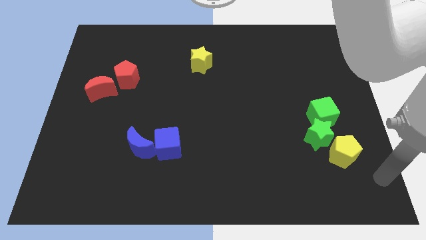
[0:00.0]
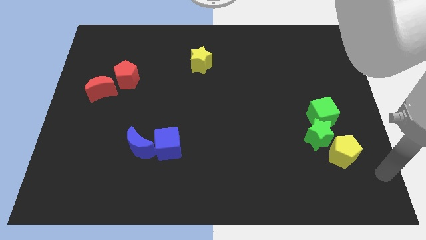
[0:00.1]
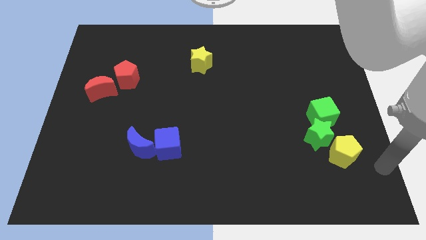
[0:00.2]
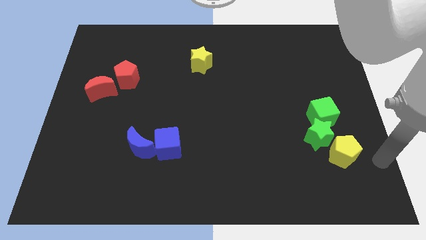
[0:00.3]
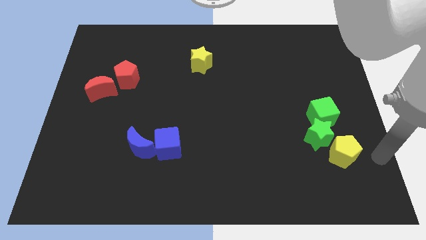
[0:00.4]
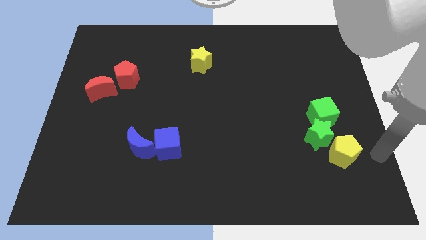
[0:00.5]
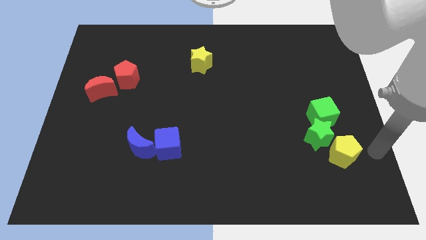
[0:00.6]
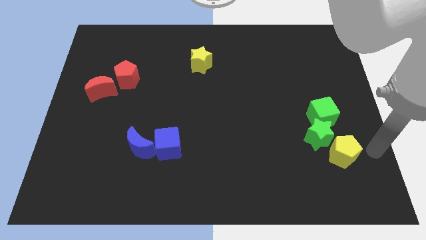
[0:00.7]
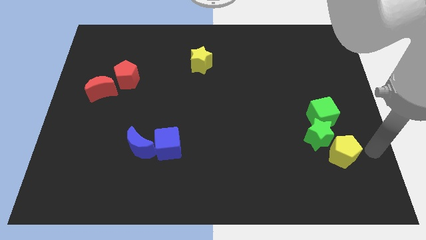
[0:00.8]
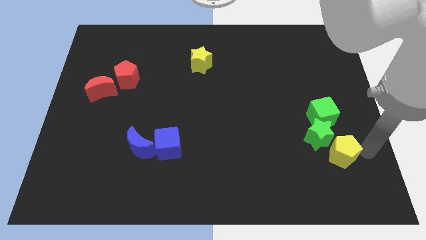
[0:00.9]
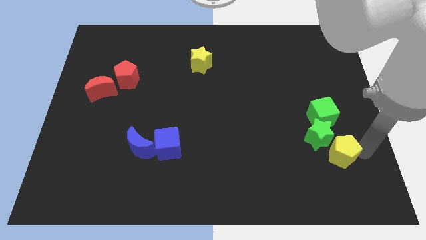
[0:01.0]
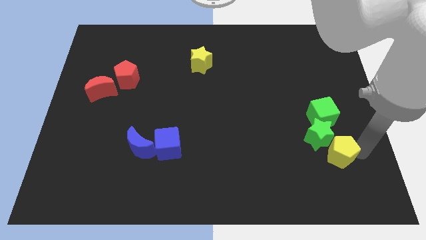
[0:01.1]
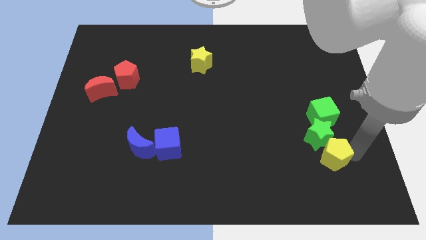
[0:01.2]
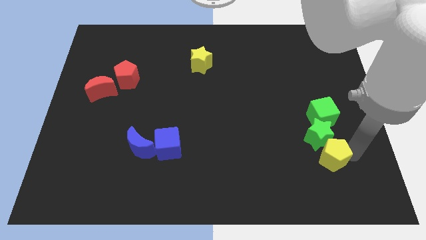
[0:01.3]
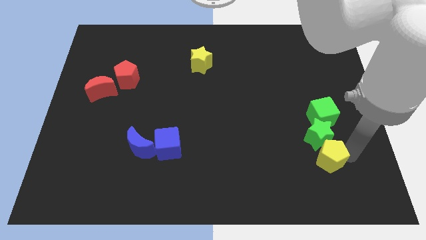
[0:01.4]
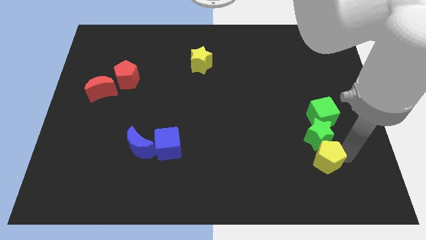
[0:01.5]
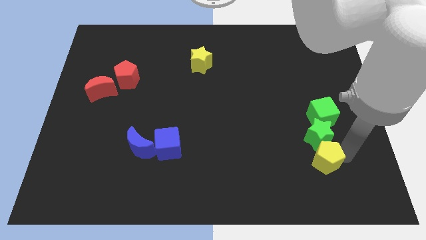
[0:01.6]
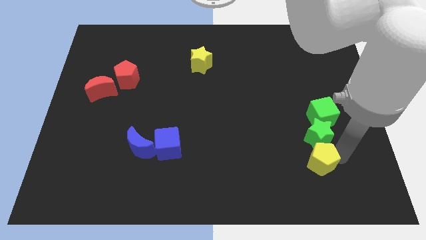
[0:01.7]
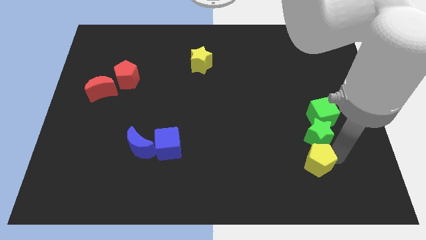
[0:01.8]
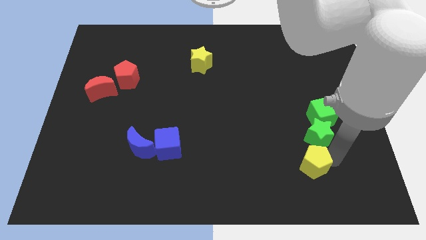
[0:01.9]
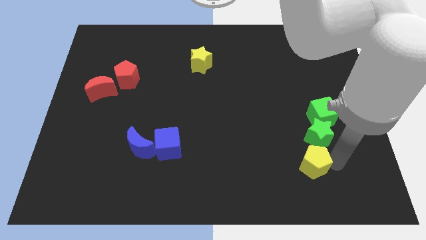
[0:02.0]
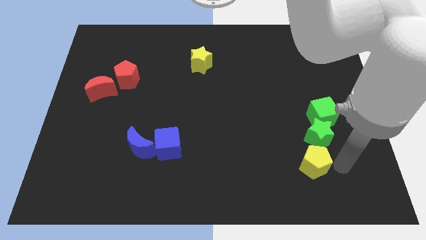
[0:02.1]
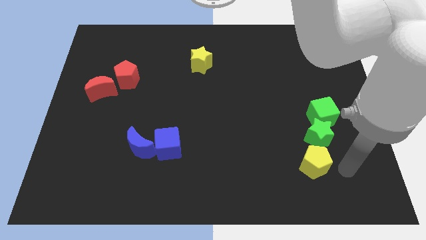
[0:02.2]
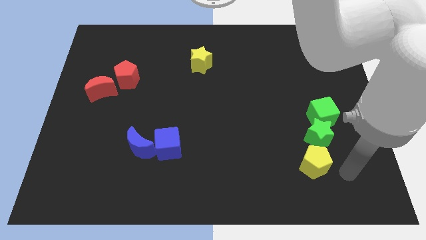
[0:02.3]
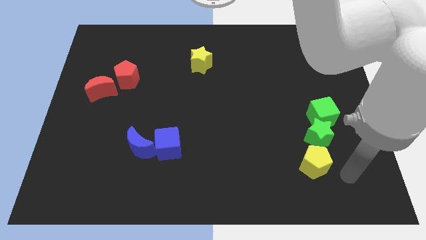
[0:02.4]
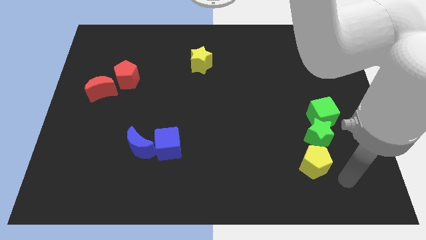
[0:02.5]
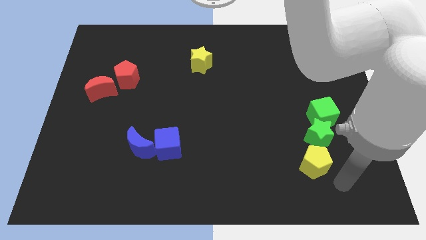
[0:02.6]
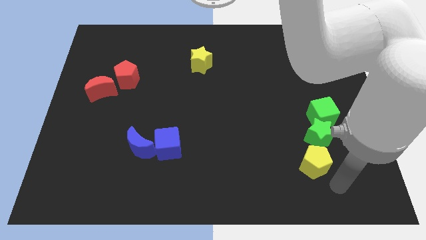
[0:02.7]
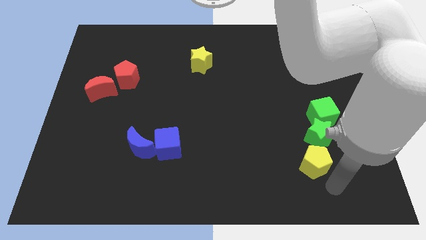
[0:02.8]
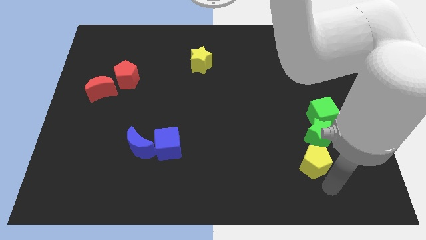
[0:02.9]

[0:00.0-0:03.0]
move the yellow pentagon to the bottom left of the green star

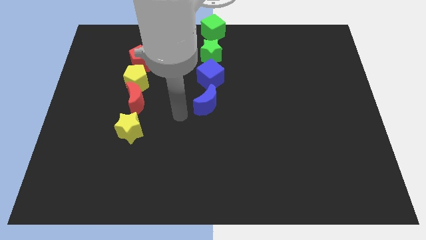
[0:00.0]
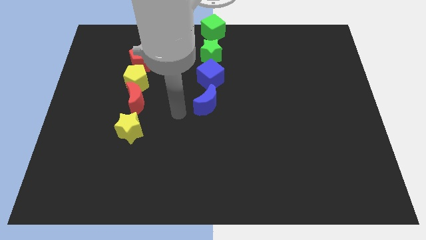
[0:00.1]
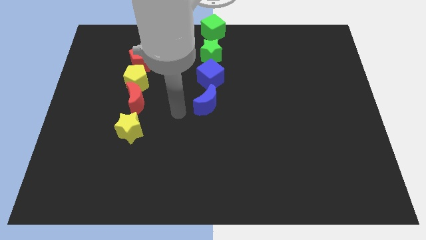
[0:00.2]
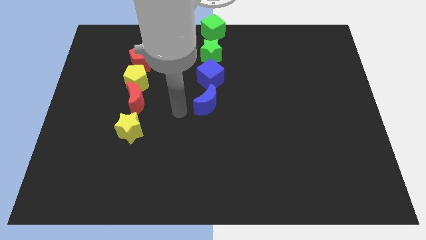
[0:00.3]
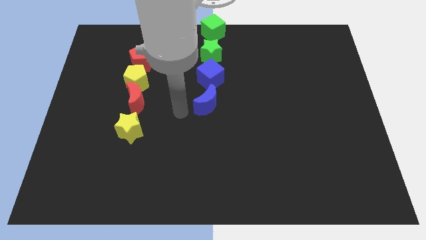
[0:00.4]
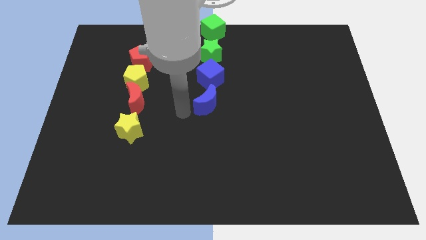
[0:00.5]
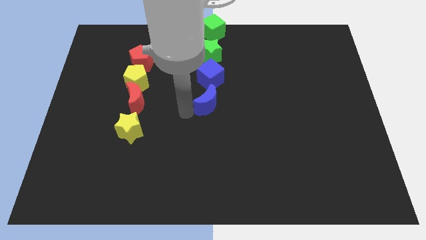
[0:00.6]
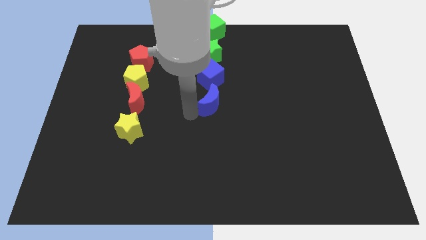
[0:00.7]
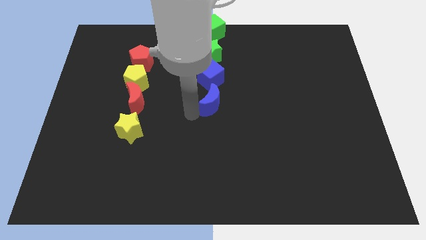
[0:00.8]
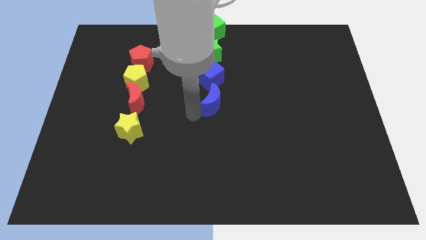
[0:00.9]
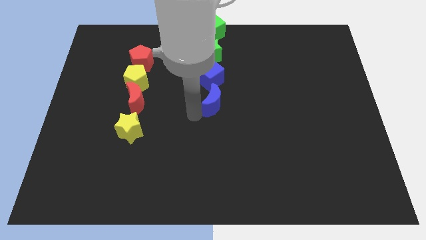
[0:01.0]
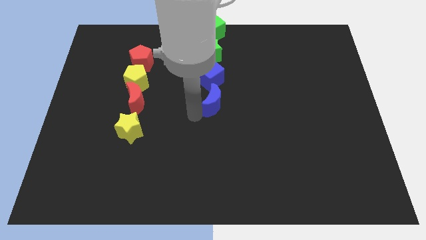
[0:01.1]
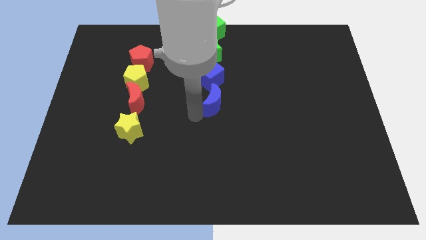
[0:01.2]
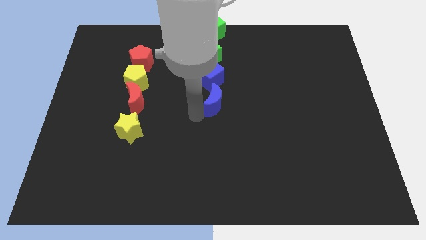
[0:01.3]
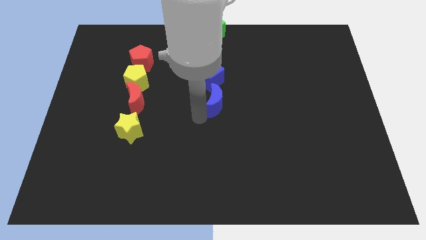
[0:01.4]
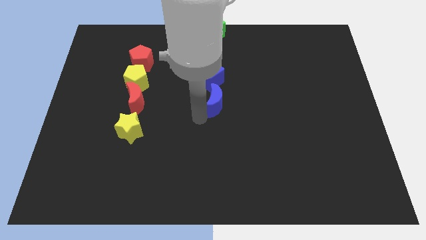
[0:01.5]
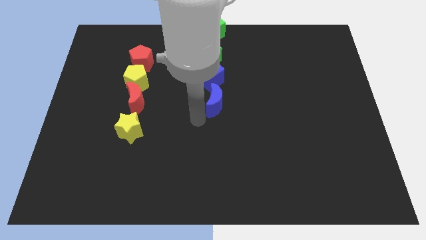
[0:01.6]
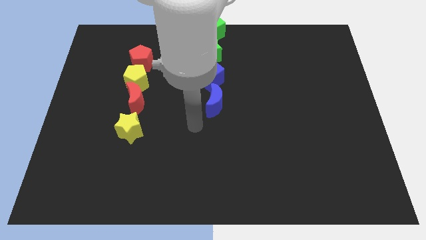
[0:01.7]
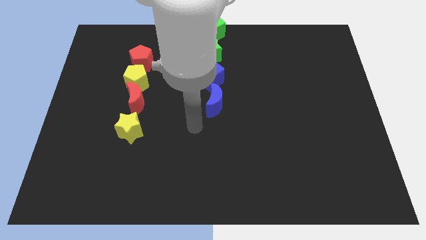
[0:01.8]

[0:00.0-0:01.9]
make a vertical line with green cubegreen starblue cube and blue moon

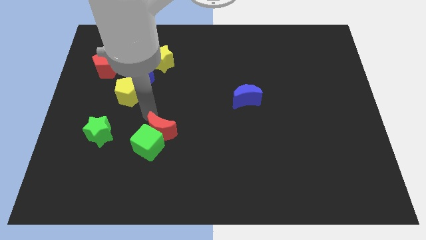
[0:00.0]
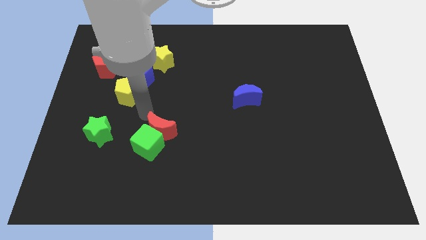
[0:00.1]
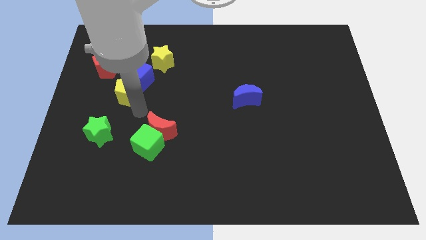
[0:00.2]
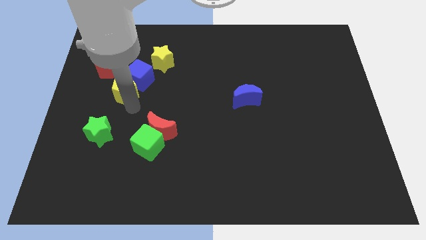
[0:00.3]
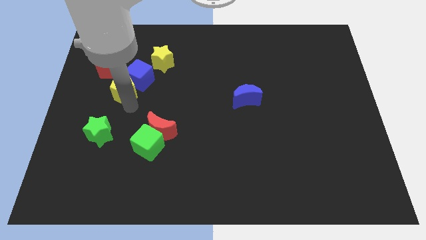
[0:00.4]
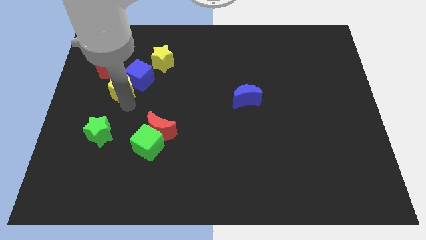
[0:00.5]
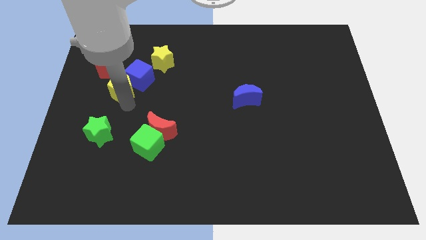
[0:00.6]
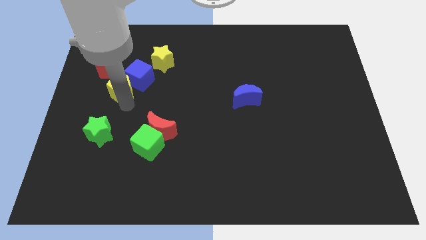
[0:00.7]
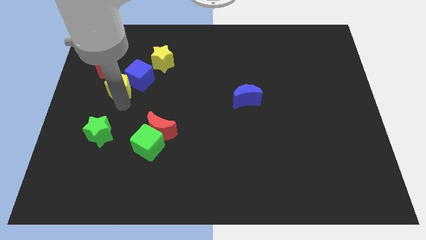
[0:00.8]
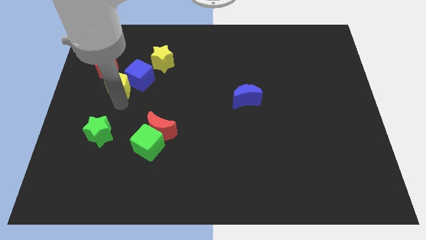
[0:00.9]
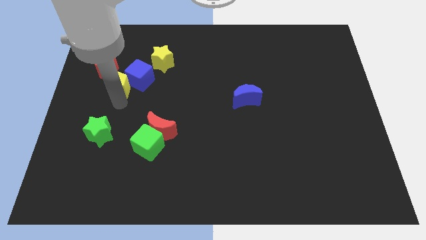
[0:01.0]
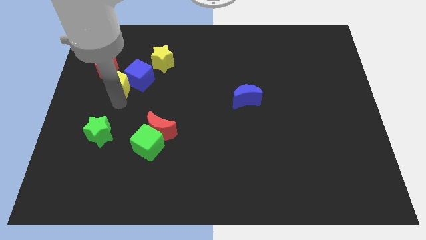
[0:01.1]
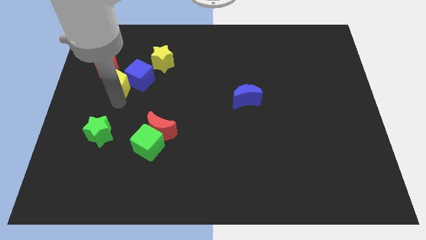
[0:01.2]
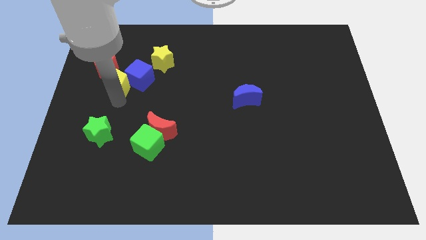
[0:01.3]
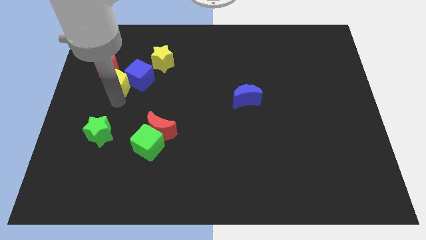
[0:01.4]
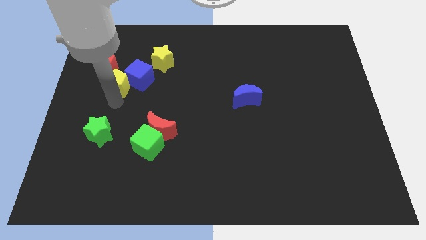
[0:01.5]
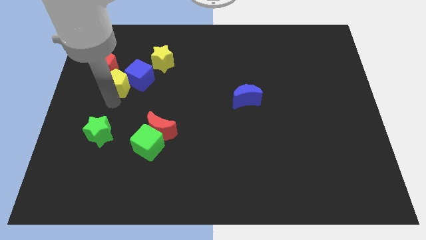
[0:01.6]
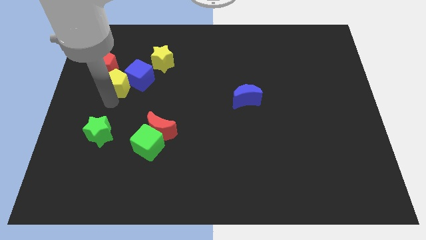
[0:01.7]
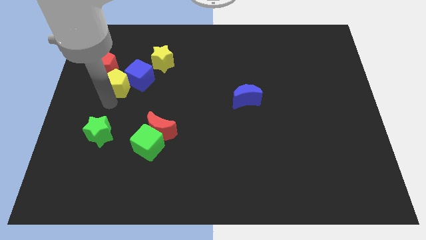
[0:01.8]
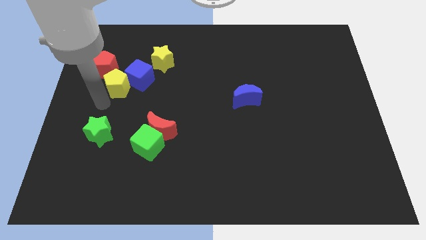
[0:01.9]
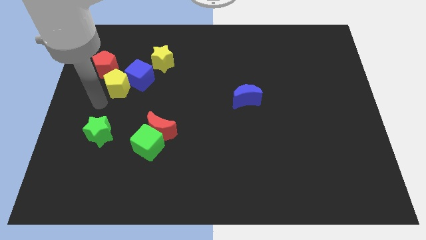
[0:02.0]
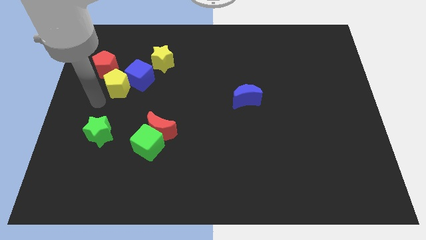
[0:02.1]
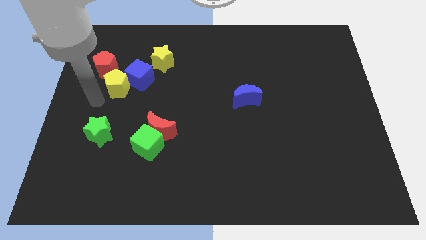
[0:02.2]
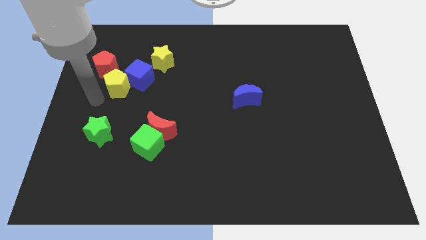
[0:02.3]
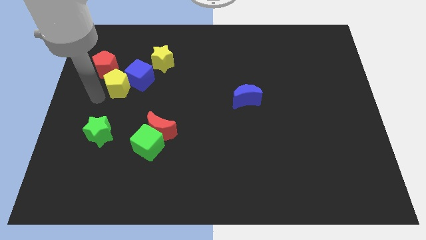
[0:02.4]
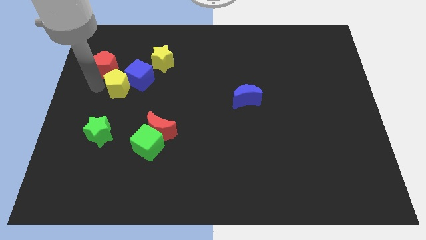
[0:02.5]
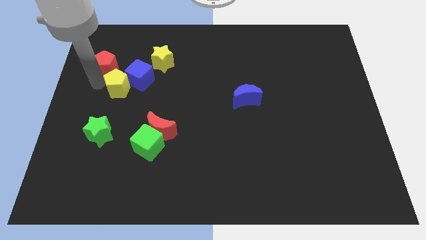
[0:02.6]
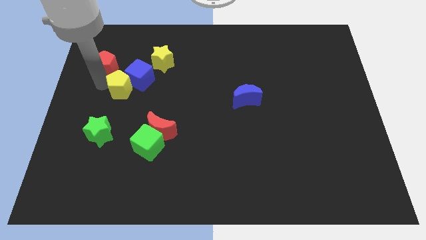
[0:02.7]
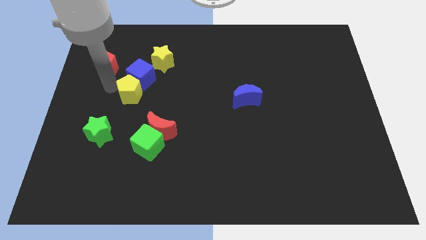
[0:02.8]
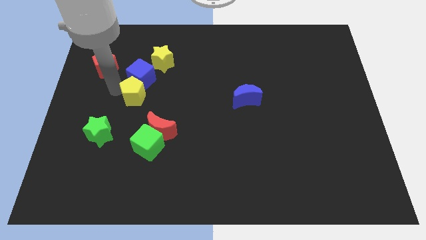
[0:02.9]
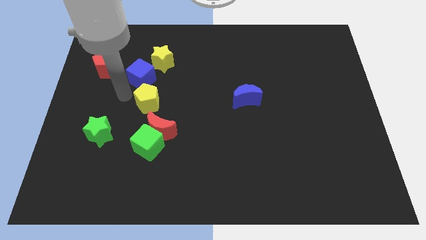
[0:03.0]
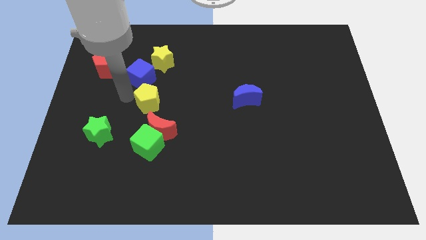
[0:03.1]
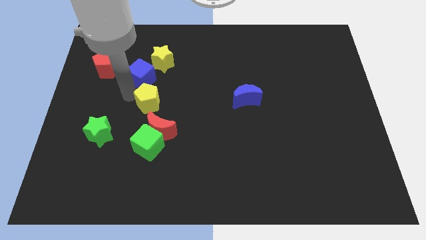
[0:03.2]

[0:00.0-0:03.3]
place the yellow pentagon at the top of red moon

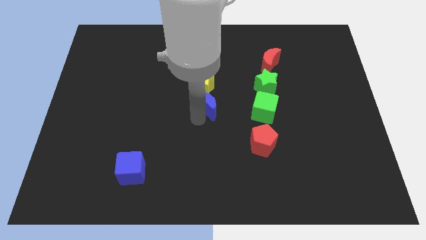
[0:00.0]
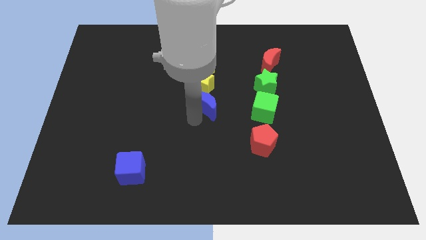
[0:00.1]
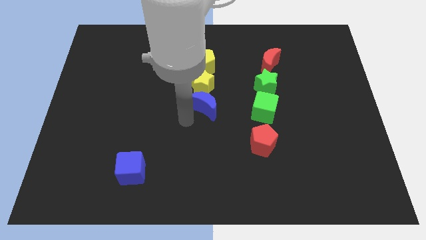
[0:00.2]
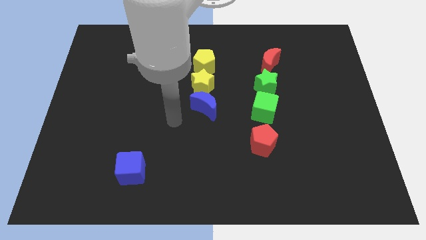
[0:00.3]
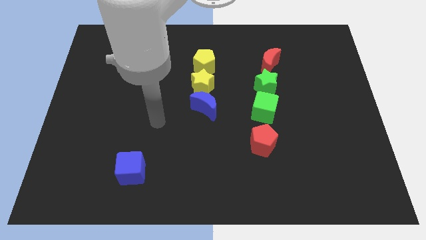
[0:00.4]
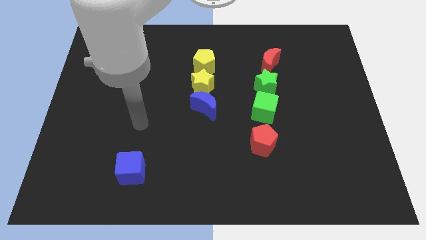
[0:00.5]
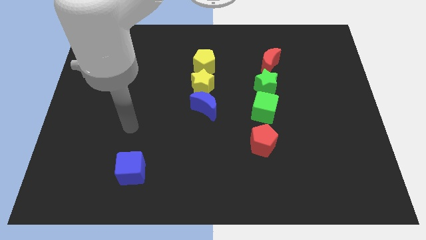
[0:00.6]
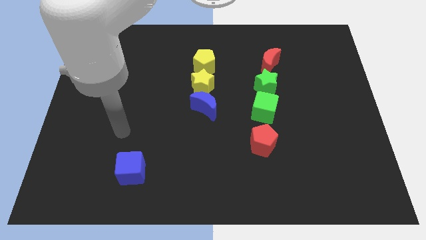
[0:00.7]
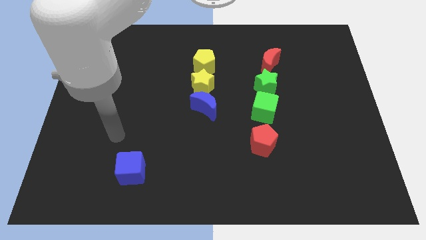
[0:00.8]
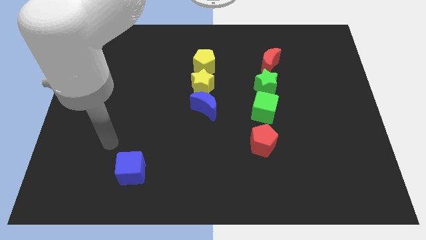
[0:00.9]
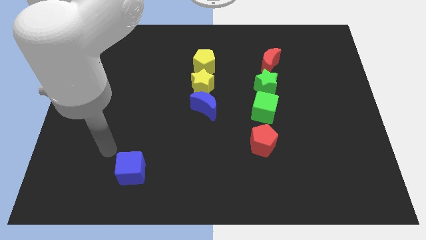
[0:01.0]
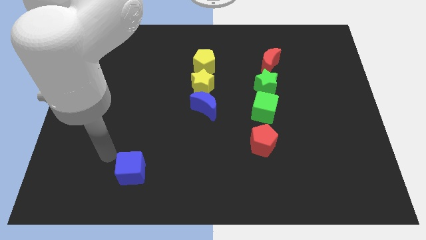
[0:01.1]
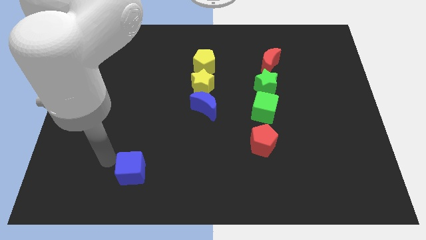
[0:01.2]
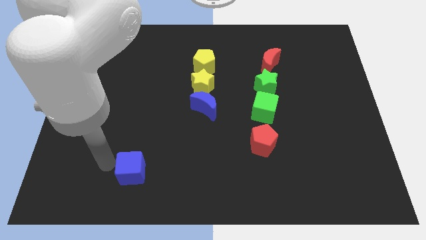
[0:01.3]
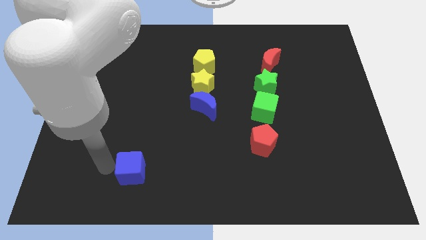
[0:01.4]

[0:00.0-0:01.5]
place your arm to the left of the blue cube
